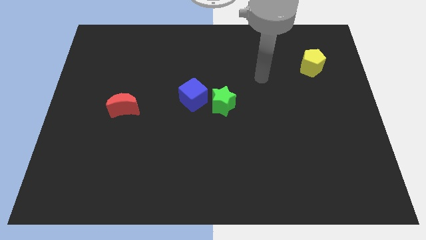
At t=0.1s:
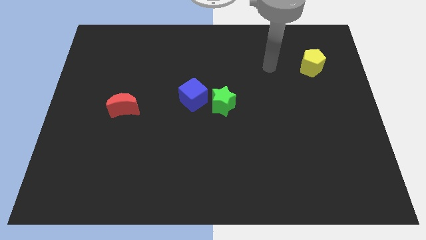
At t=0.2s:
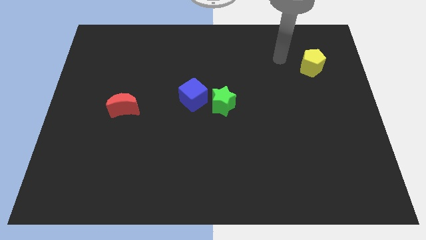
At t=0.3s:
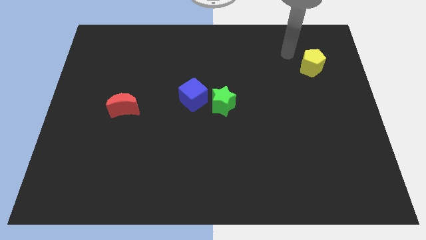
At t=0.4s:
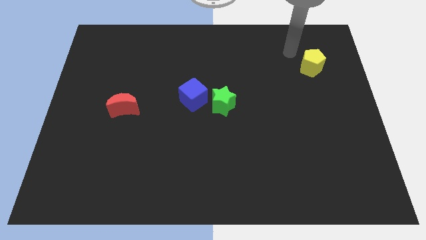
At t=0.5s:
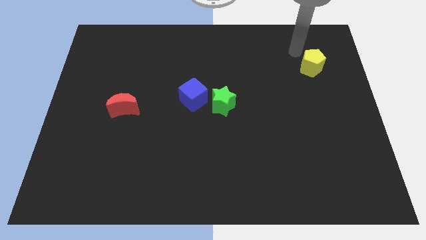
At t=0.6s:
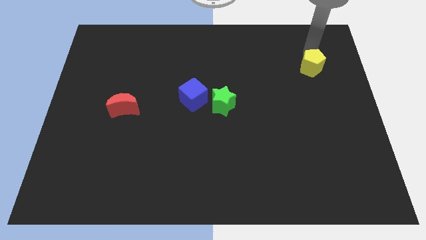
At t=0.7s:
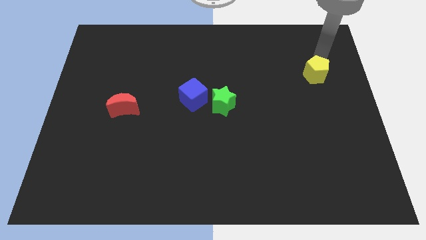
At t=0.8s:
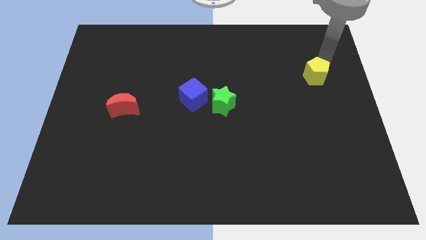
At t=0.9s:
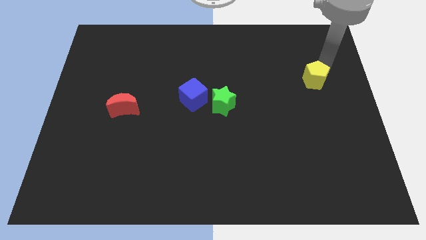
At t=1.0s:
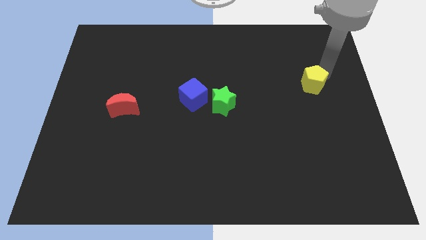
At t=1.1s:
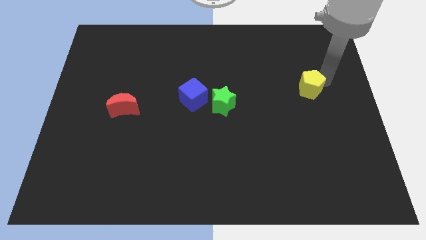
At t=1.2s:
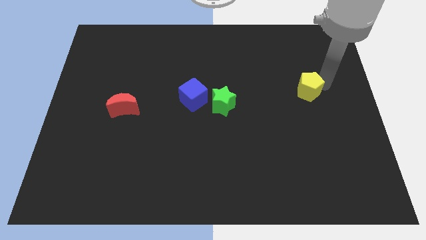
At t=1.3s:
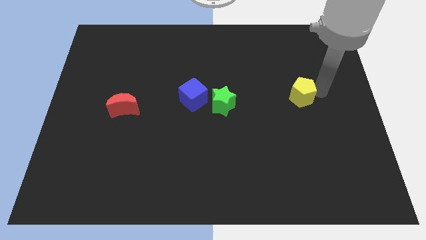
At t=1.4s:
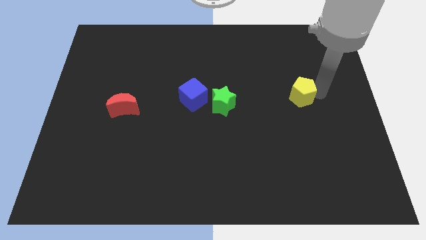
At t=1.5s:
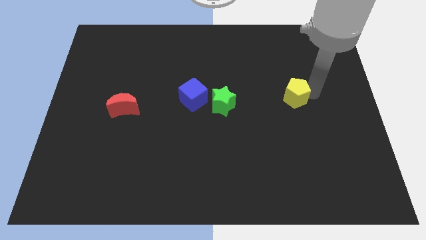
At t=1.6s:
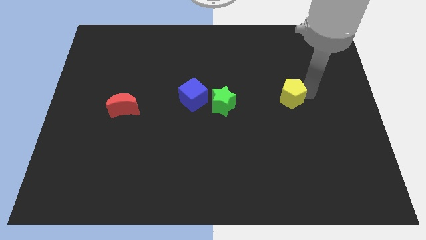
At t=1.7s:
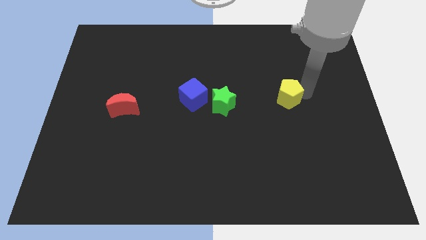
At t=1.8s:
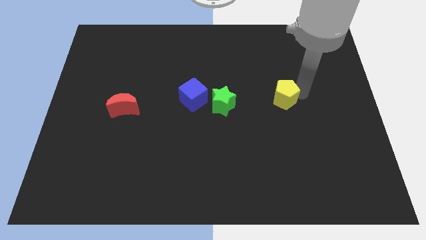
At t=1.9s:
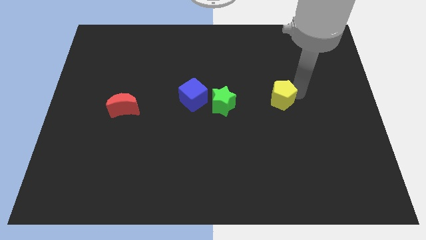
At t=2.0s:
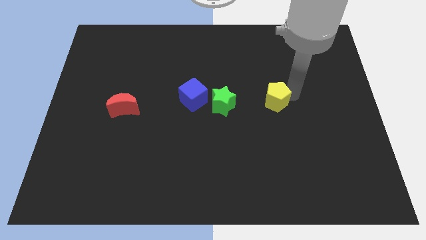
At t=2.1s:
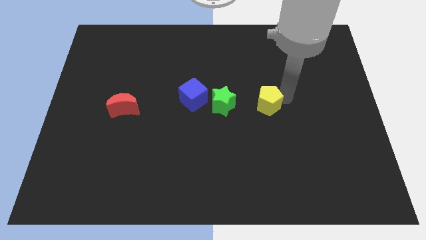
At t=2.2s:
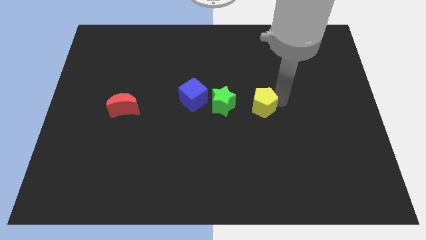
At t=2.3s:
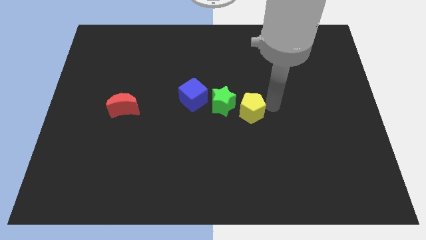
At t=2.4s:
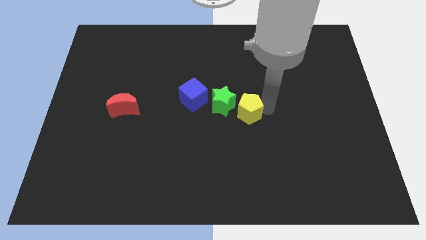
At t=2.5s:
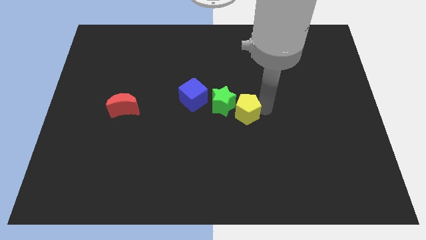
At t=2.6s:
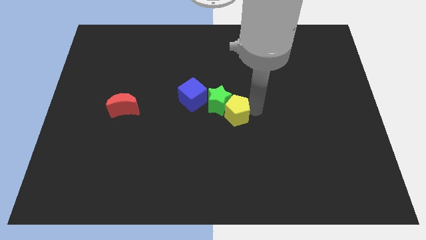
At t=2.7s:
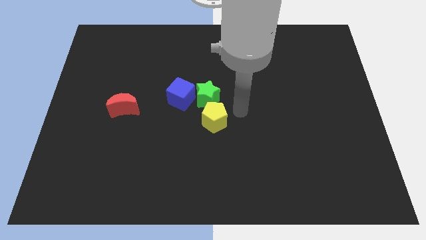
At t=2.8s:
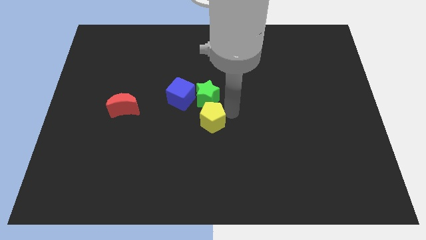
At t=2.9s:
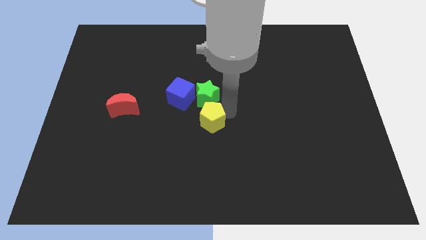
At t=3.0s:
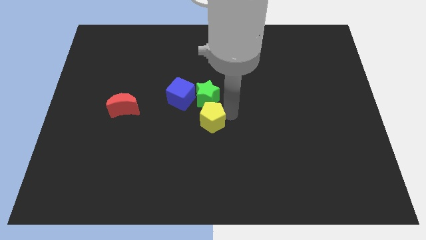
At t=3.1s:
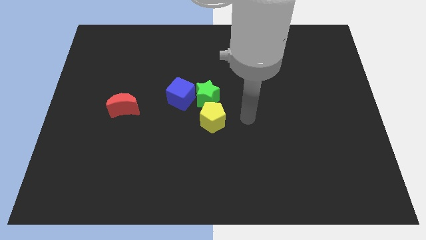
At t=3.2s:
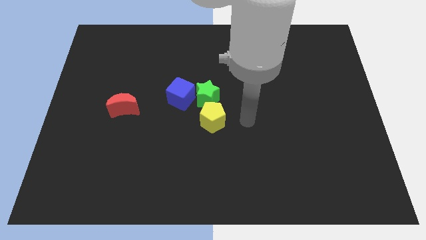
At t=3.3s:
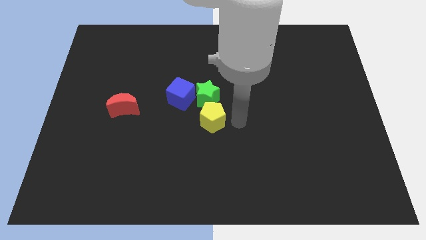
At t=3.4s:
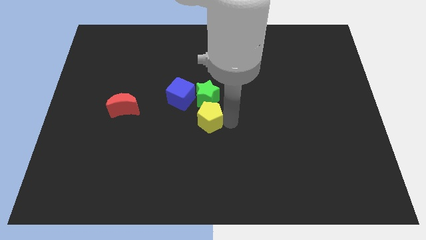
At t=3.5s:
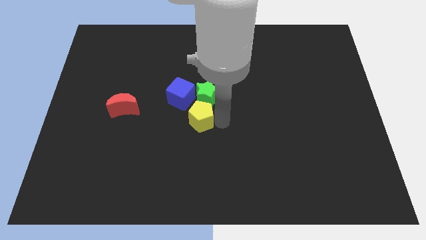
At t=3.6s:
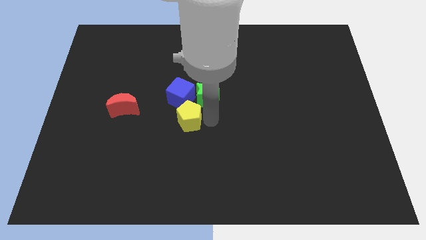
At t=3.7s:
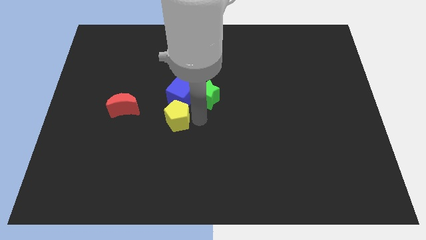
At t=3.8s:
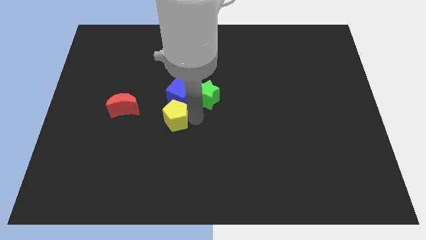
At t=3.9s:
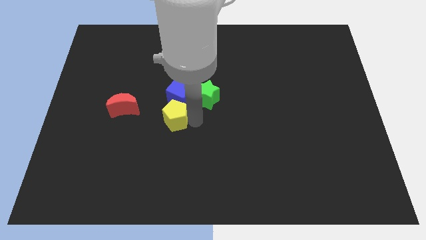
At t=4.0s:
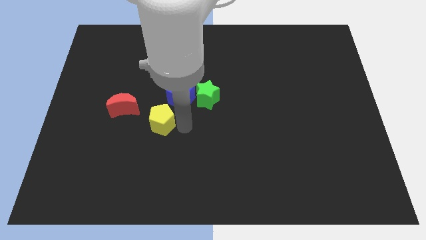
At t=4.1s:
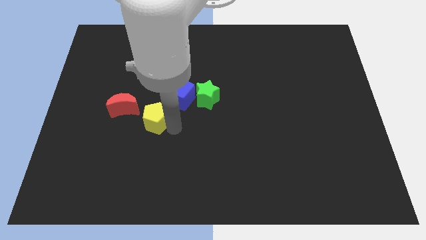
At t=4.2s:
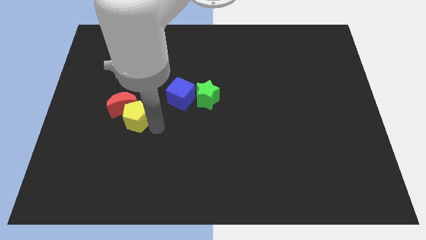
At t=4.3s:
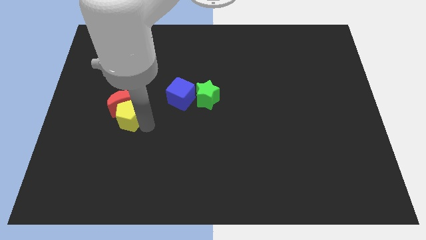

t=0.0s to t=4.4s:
move the pentagon to the red block

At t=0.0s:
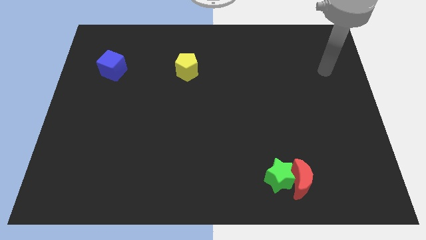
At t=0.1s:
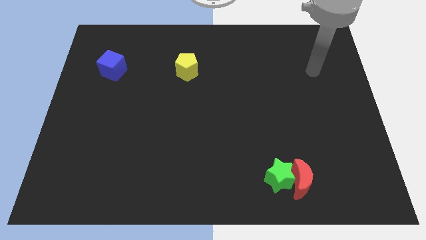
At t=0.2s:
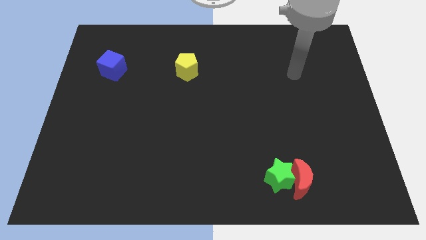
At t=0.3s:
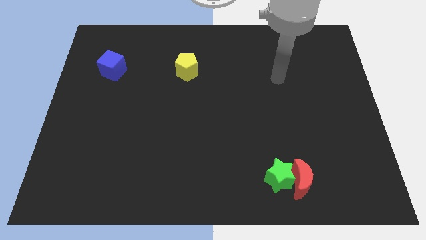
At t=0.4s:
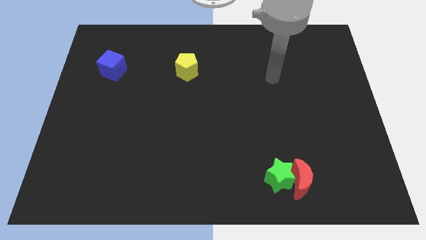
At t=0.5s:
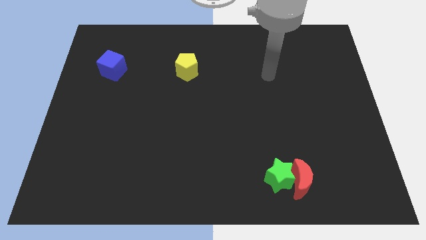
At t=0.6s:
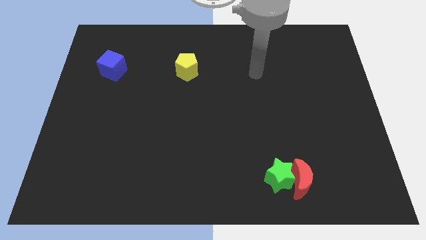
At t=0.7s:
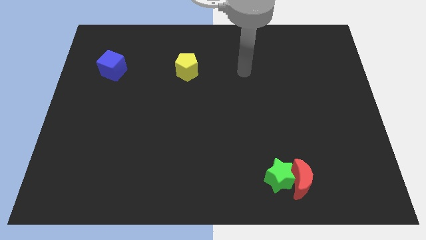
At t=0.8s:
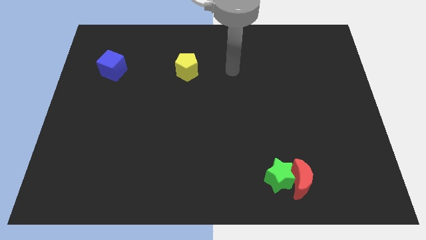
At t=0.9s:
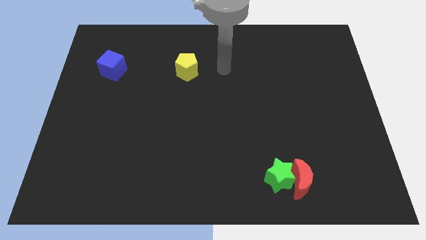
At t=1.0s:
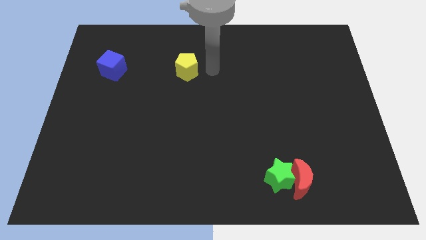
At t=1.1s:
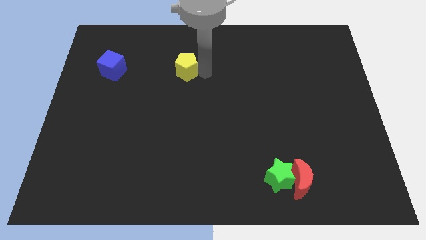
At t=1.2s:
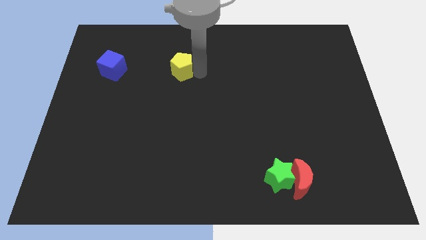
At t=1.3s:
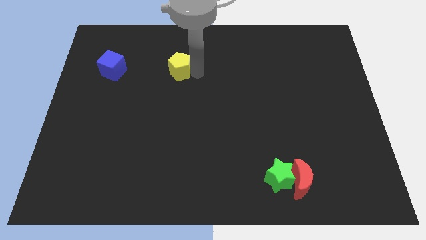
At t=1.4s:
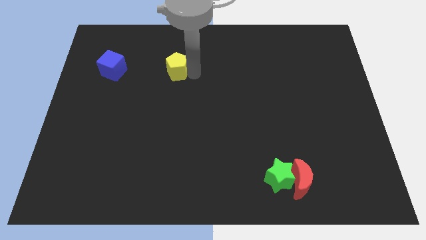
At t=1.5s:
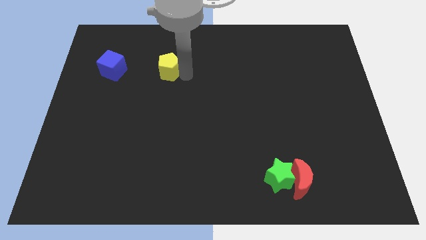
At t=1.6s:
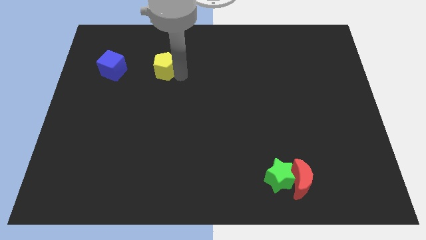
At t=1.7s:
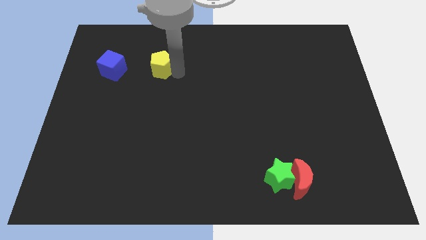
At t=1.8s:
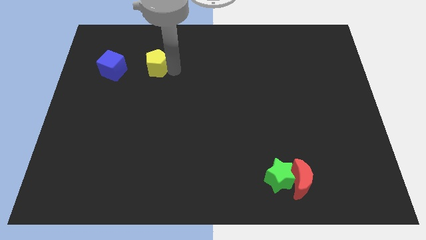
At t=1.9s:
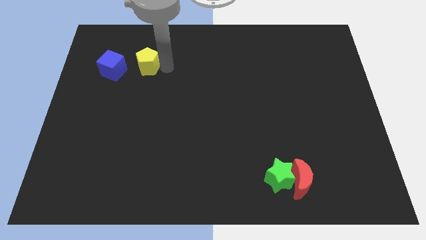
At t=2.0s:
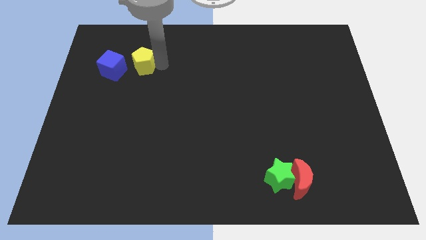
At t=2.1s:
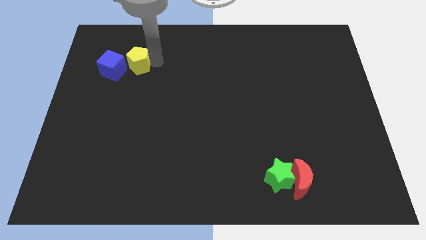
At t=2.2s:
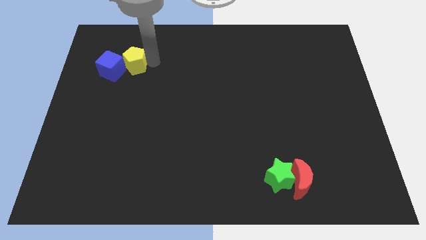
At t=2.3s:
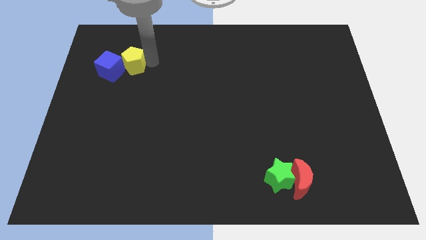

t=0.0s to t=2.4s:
put the yellow block next to the cube

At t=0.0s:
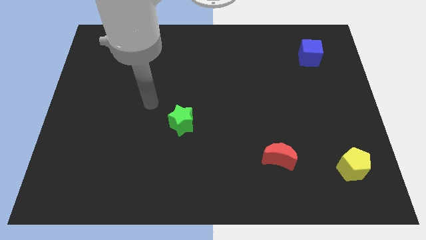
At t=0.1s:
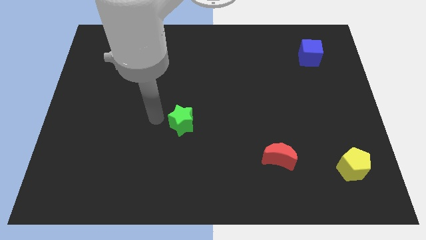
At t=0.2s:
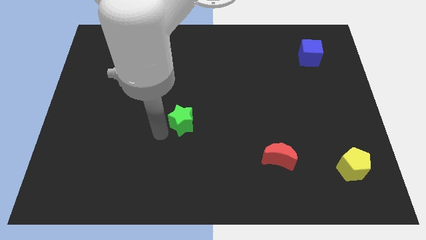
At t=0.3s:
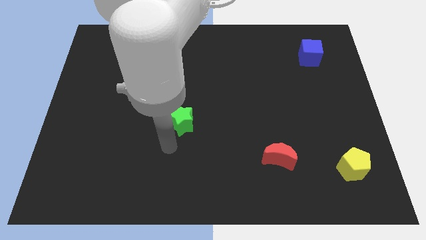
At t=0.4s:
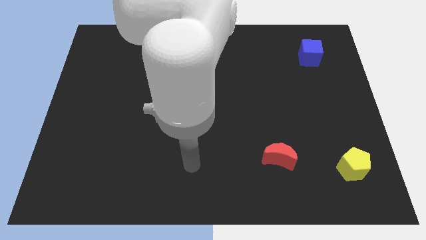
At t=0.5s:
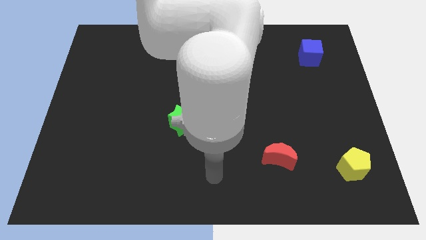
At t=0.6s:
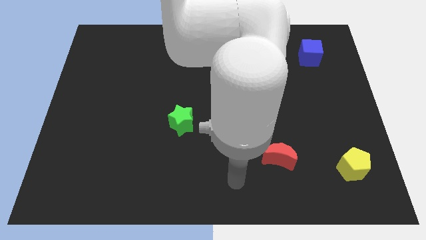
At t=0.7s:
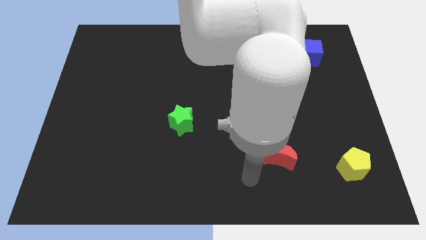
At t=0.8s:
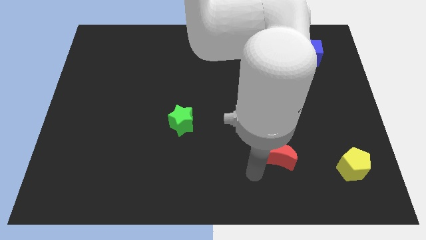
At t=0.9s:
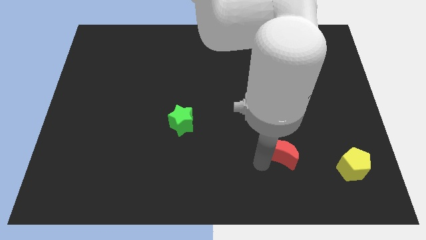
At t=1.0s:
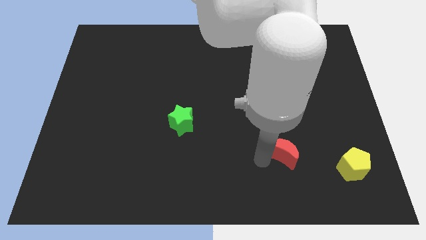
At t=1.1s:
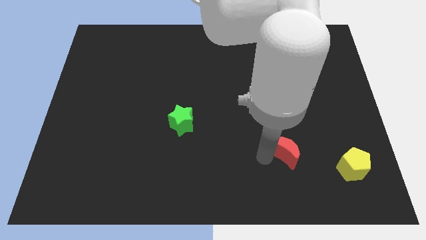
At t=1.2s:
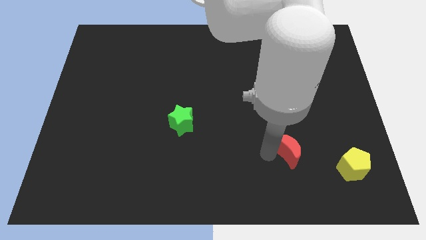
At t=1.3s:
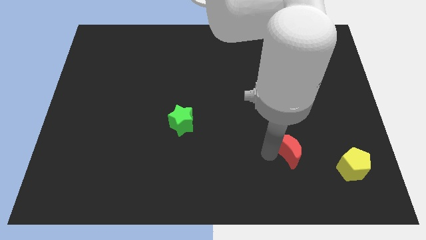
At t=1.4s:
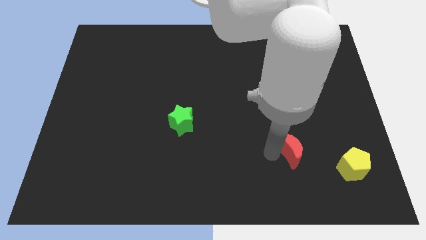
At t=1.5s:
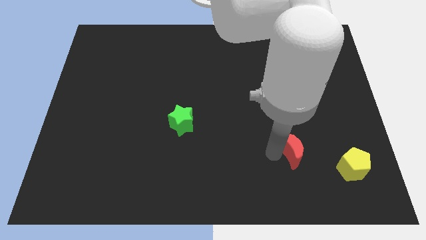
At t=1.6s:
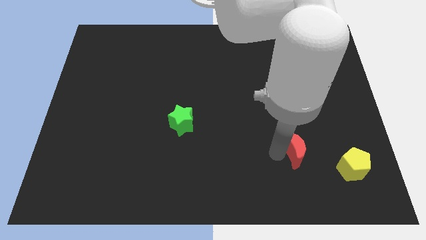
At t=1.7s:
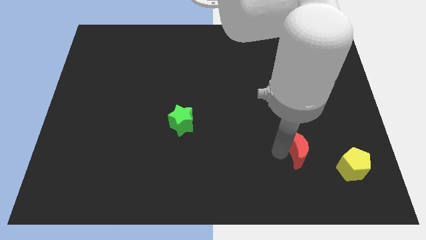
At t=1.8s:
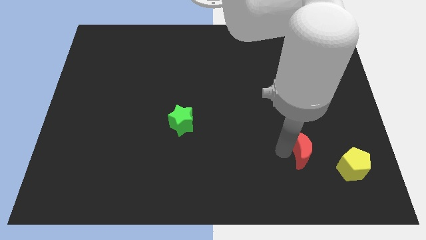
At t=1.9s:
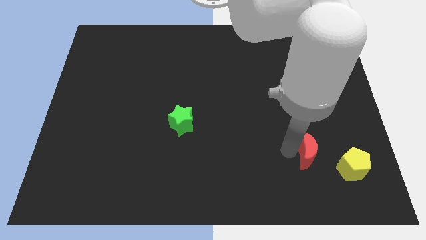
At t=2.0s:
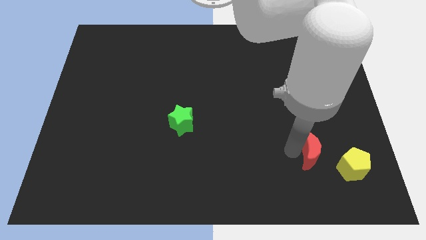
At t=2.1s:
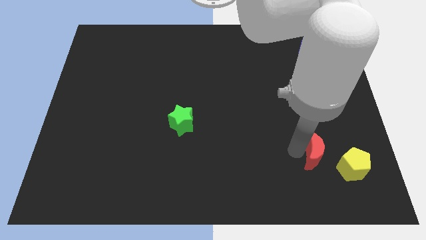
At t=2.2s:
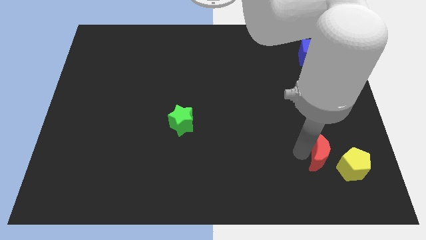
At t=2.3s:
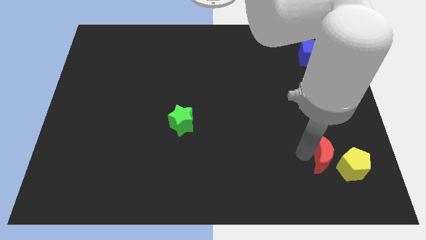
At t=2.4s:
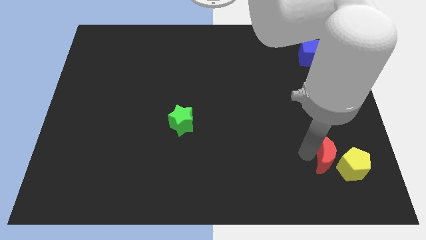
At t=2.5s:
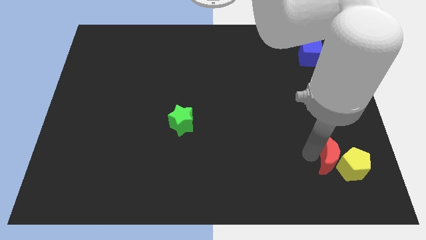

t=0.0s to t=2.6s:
put the red moon close to the pentagon
